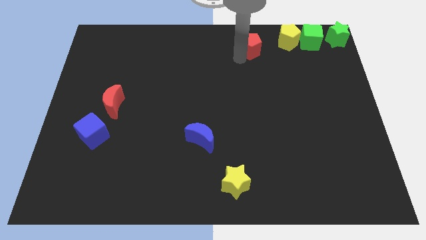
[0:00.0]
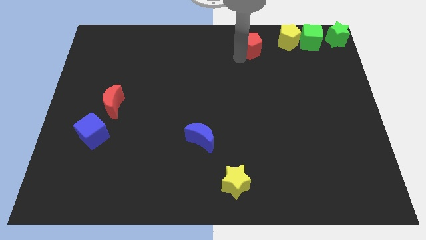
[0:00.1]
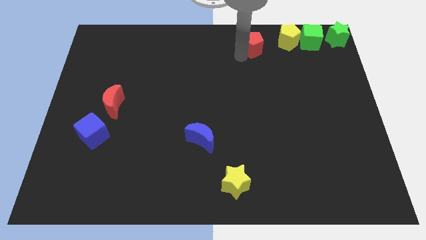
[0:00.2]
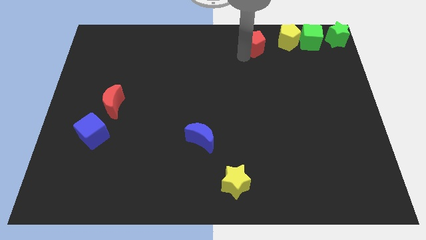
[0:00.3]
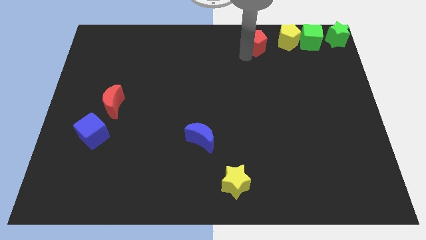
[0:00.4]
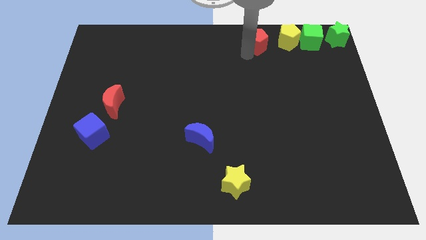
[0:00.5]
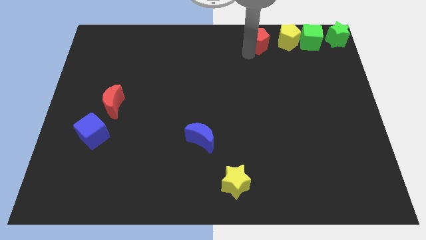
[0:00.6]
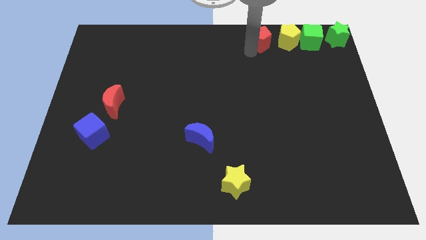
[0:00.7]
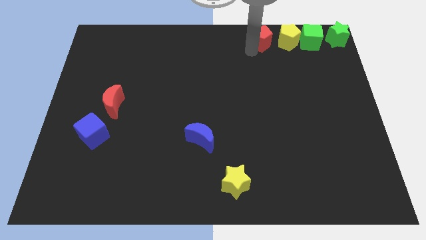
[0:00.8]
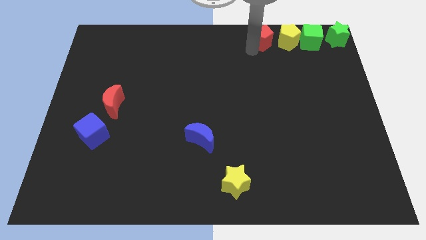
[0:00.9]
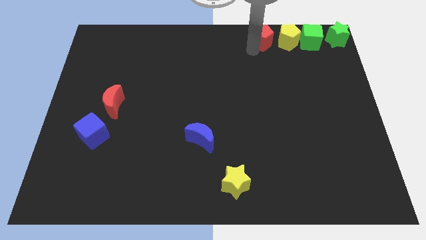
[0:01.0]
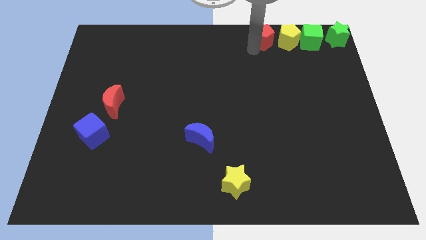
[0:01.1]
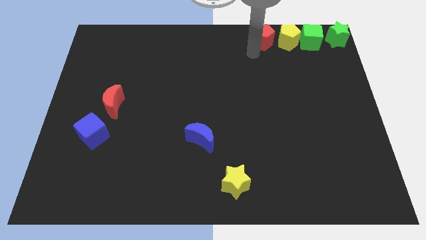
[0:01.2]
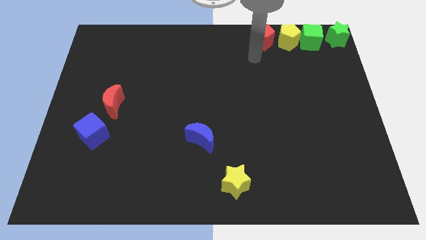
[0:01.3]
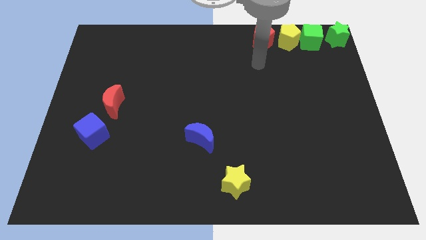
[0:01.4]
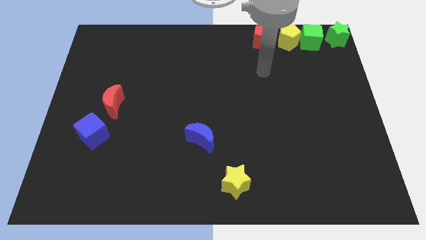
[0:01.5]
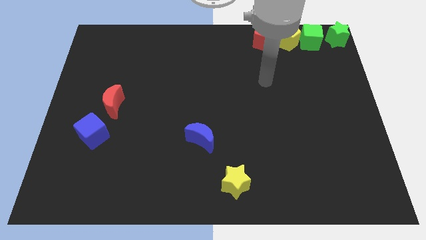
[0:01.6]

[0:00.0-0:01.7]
move the red pentagon parallel to the left of the yellow pentagon

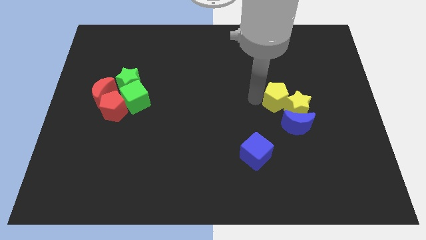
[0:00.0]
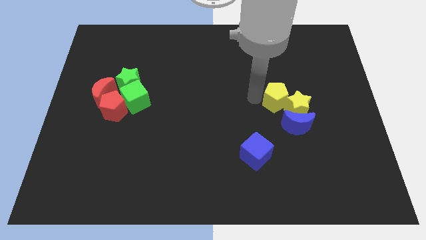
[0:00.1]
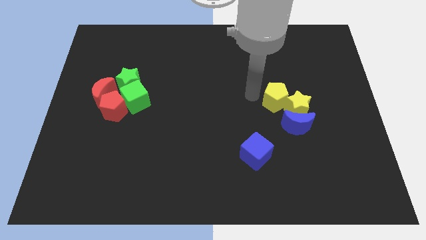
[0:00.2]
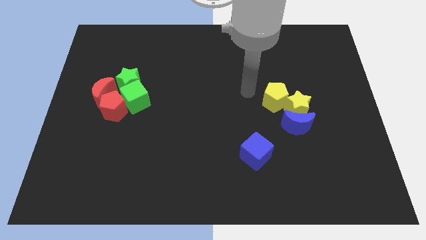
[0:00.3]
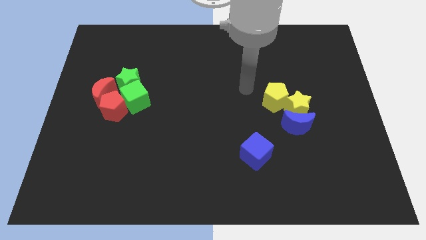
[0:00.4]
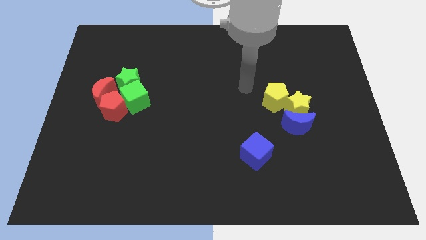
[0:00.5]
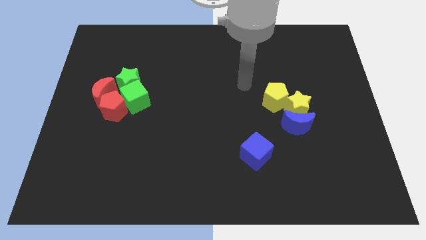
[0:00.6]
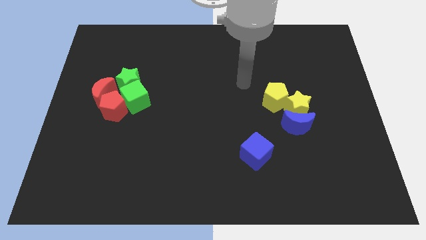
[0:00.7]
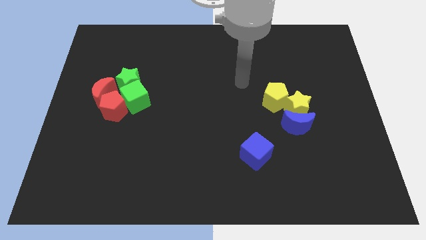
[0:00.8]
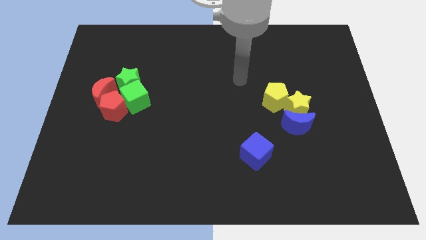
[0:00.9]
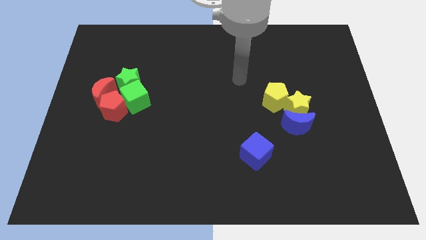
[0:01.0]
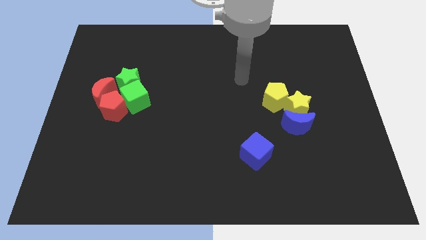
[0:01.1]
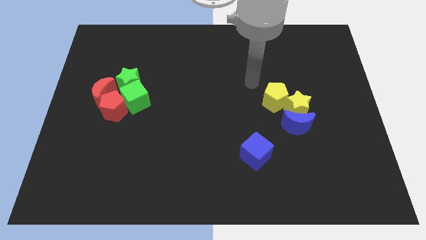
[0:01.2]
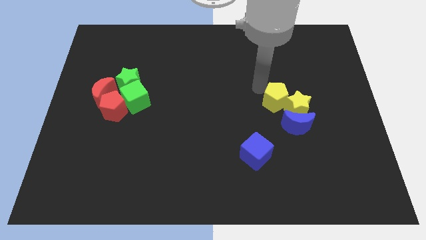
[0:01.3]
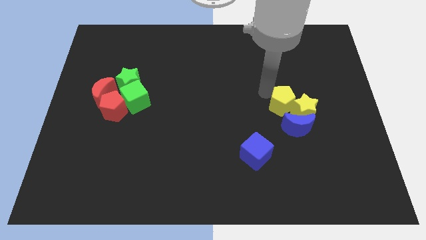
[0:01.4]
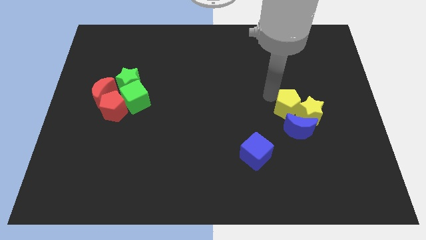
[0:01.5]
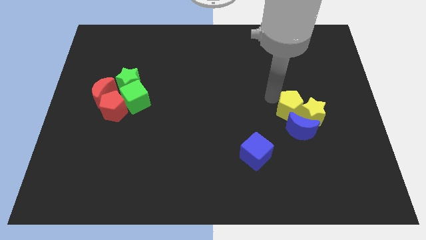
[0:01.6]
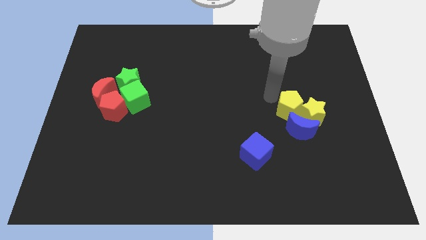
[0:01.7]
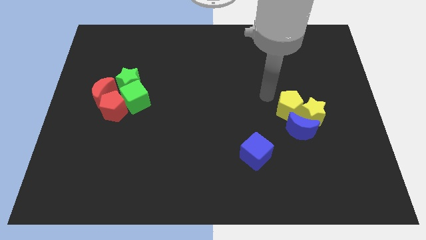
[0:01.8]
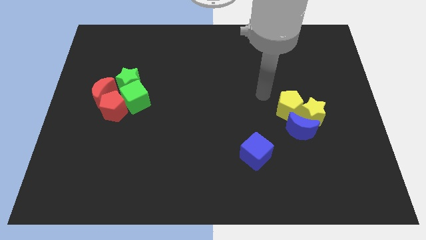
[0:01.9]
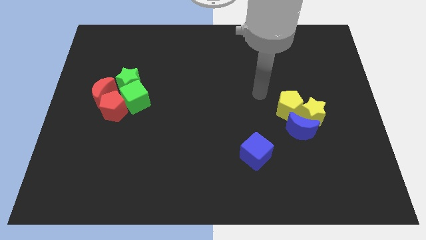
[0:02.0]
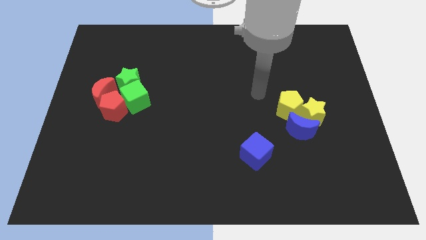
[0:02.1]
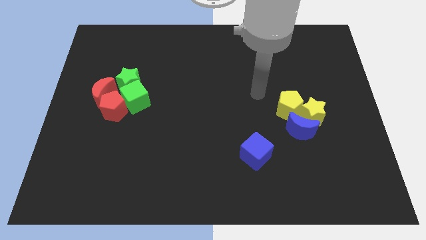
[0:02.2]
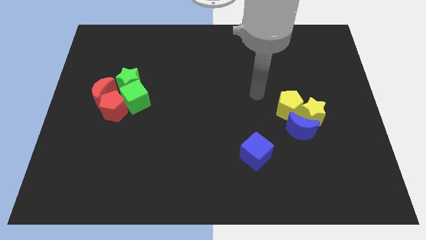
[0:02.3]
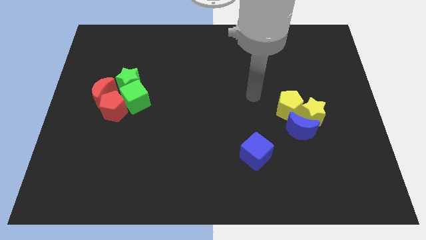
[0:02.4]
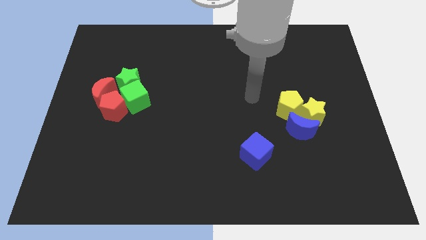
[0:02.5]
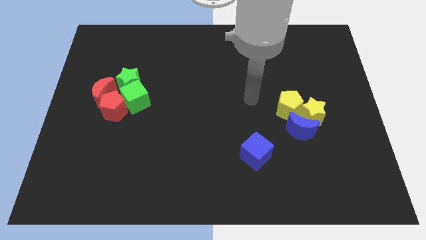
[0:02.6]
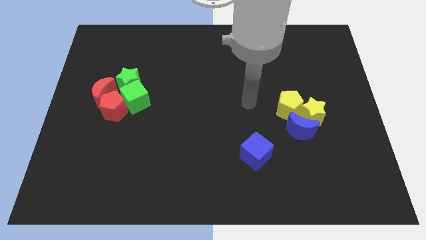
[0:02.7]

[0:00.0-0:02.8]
move yellow blocks and blue moon to the right

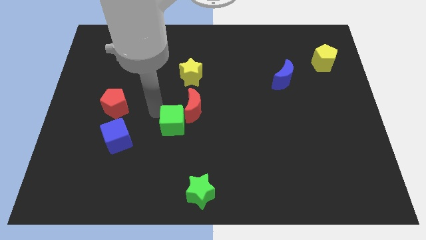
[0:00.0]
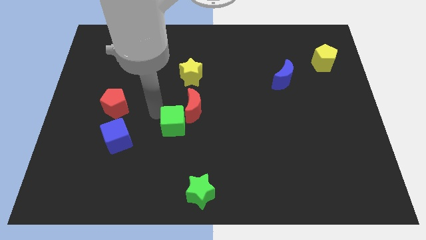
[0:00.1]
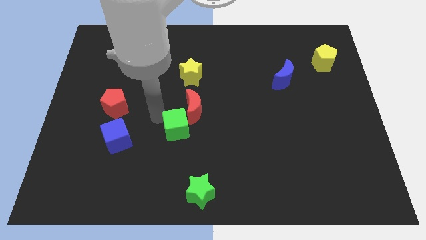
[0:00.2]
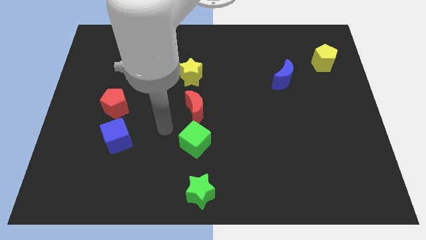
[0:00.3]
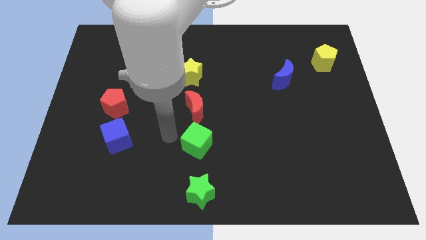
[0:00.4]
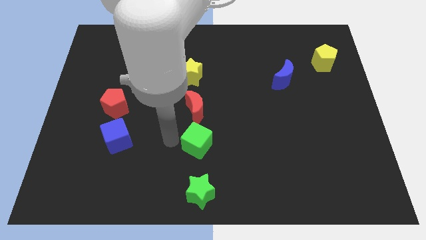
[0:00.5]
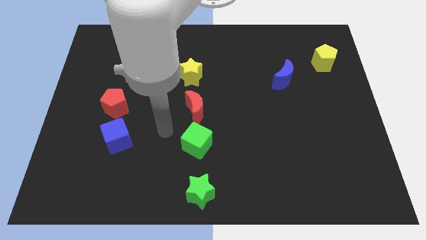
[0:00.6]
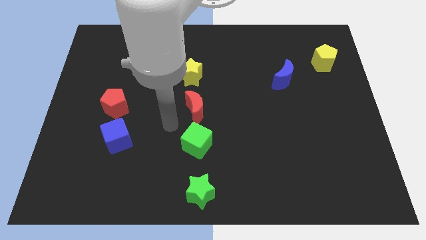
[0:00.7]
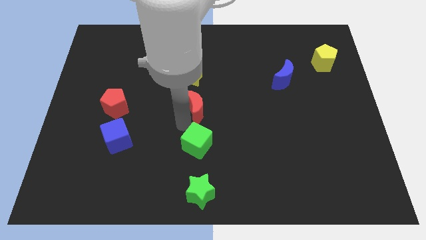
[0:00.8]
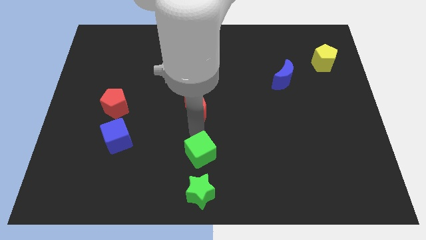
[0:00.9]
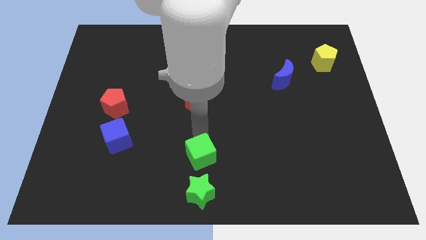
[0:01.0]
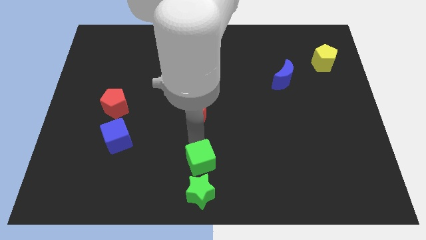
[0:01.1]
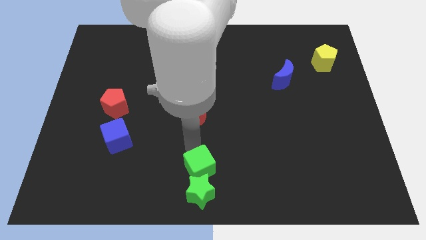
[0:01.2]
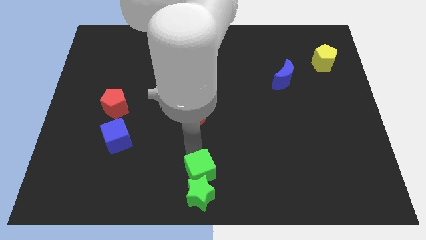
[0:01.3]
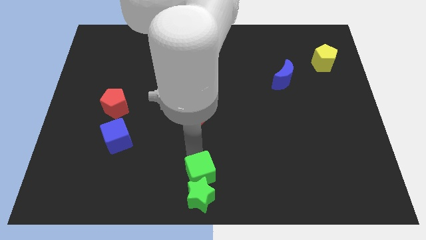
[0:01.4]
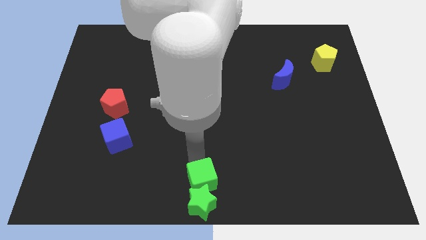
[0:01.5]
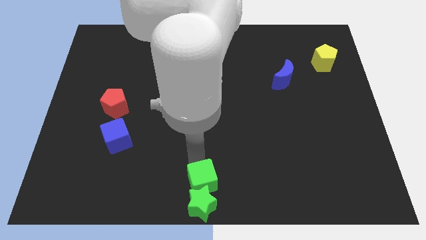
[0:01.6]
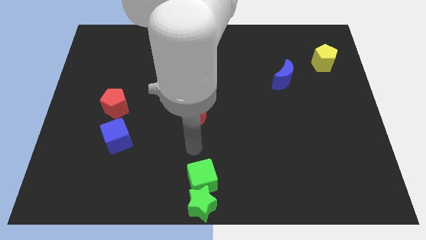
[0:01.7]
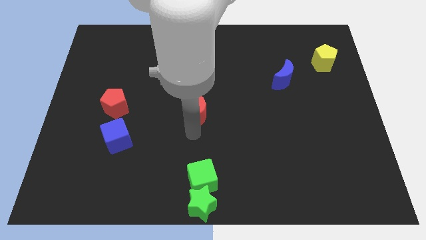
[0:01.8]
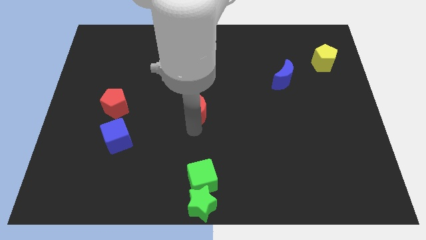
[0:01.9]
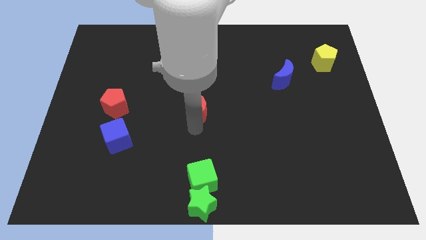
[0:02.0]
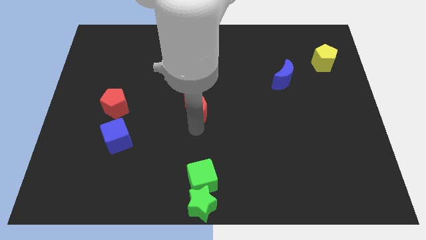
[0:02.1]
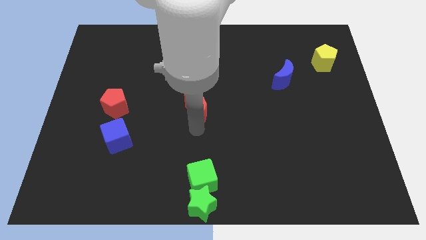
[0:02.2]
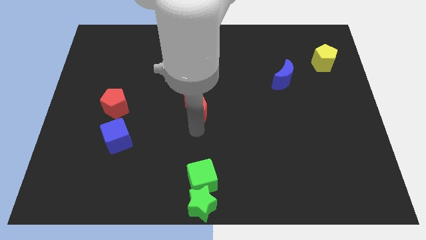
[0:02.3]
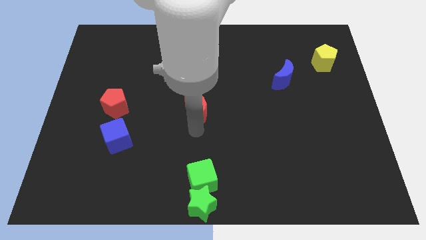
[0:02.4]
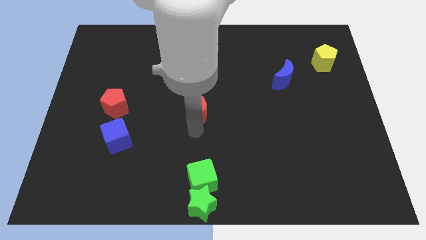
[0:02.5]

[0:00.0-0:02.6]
place the green cube at the top of green star

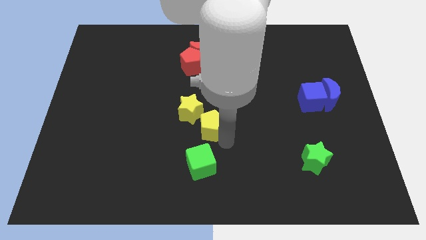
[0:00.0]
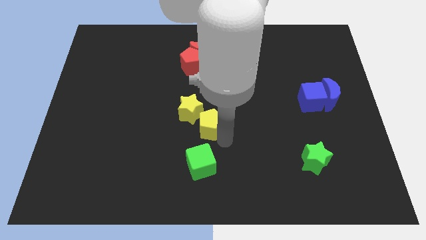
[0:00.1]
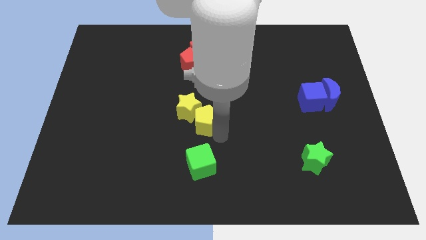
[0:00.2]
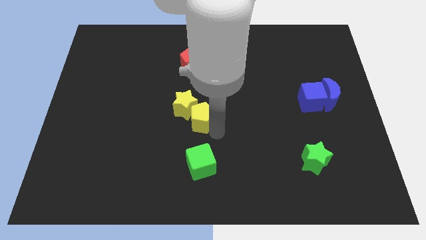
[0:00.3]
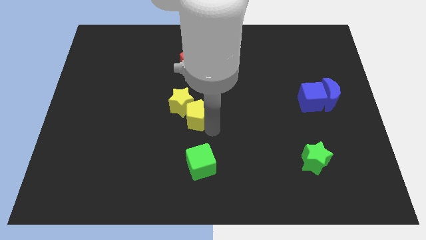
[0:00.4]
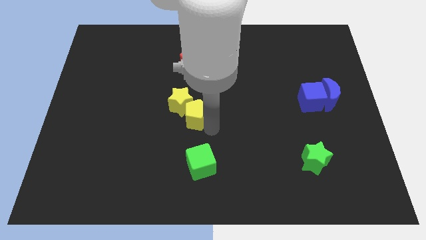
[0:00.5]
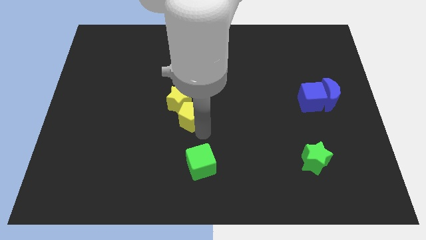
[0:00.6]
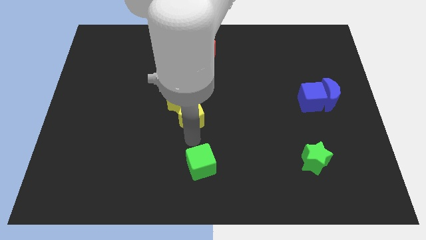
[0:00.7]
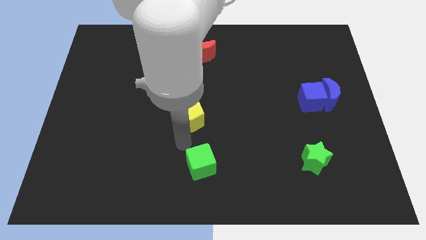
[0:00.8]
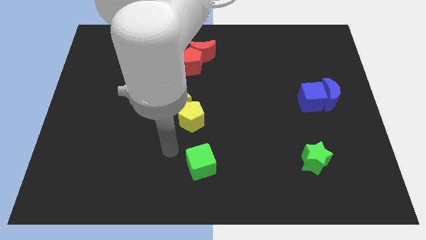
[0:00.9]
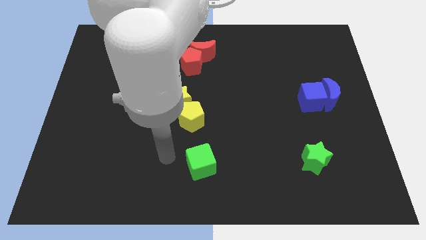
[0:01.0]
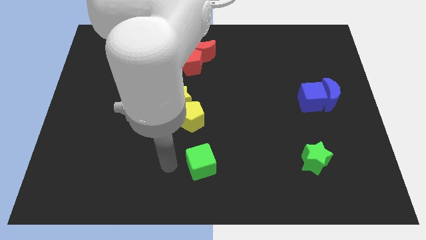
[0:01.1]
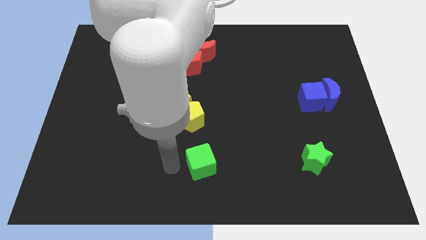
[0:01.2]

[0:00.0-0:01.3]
put the yellow blocks vertically below the red blocks

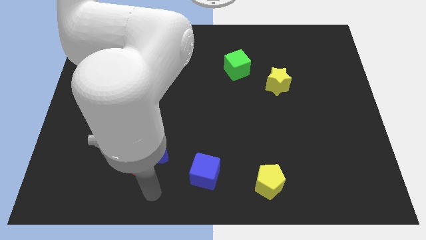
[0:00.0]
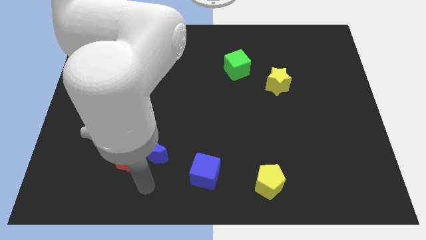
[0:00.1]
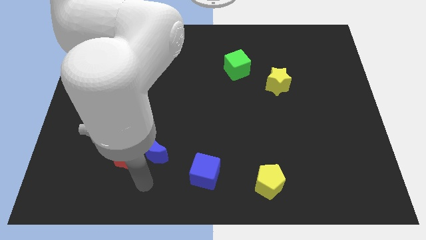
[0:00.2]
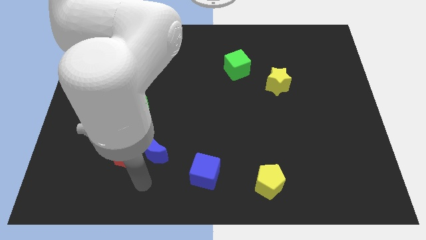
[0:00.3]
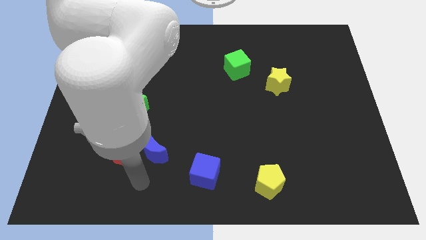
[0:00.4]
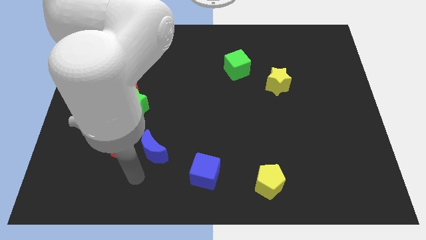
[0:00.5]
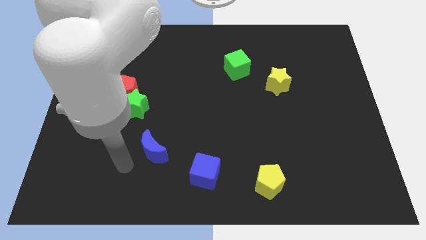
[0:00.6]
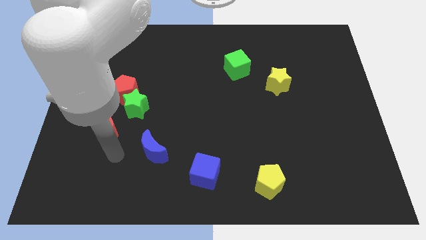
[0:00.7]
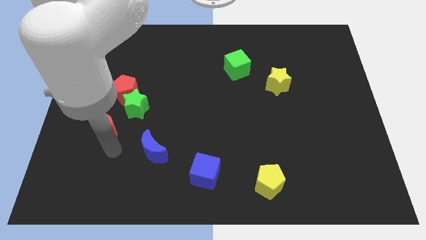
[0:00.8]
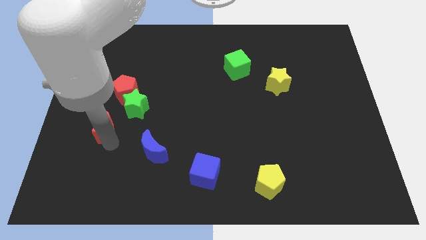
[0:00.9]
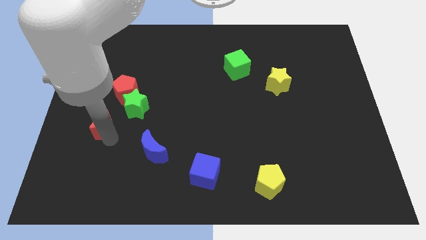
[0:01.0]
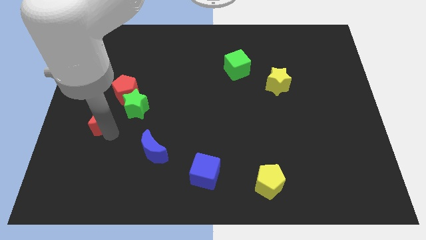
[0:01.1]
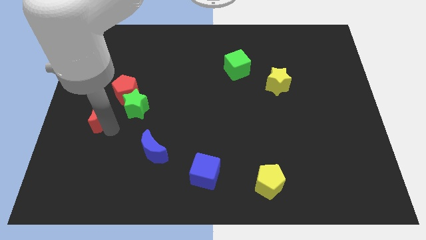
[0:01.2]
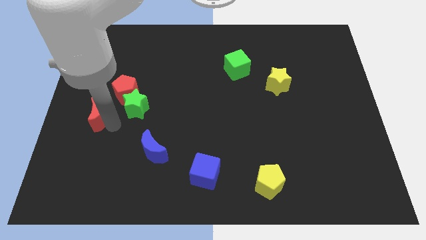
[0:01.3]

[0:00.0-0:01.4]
push the red crescent to the left of the green star
